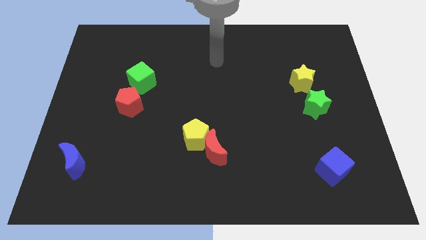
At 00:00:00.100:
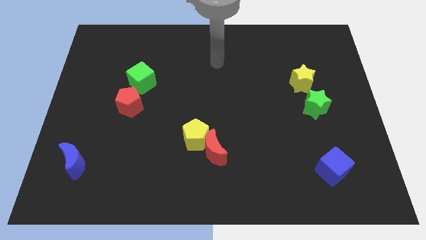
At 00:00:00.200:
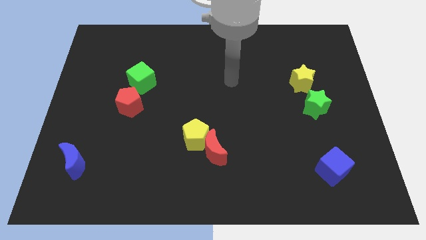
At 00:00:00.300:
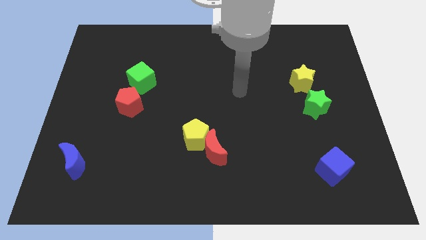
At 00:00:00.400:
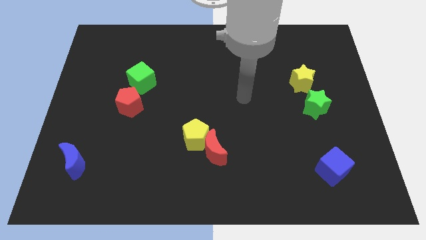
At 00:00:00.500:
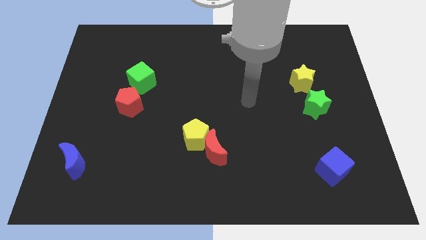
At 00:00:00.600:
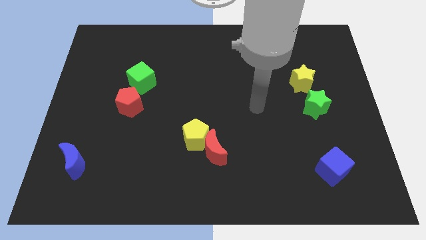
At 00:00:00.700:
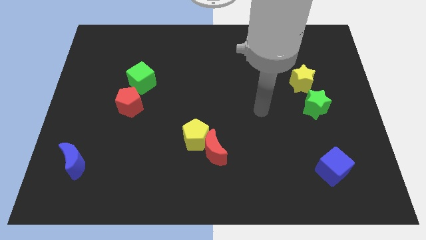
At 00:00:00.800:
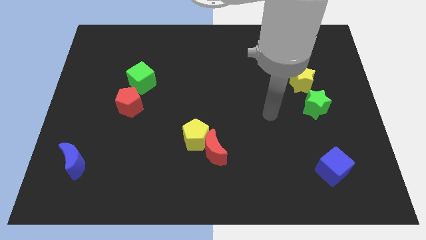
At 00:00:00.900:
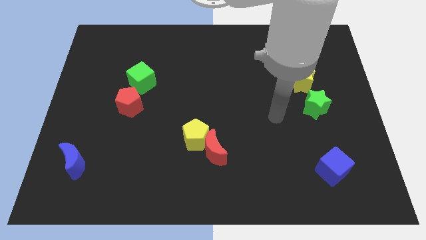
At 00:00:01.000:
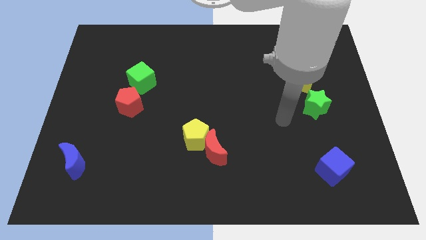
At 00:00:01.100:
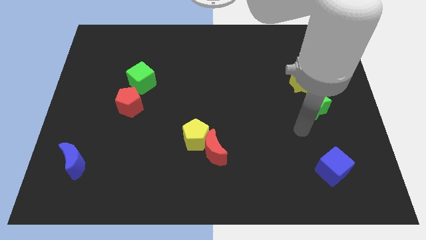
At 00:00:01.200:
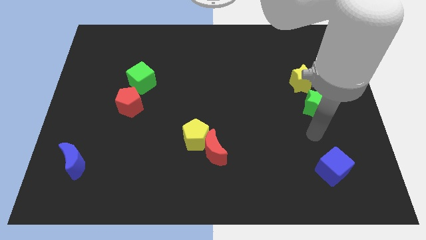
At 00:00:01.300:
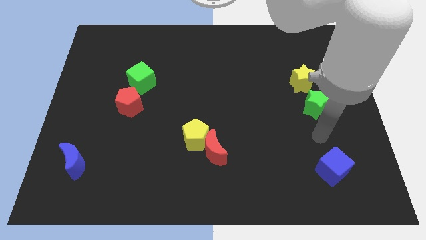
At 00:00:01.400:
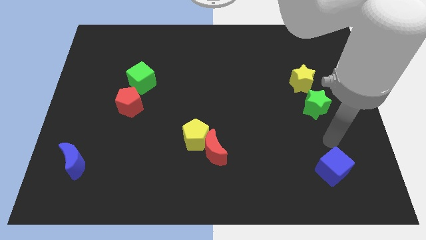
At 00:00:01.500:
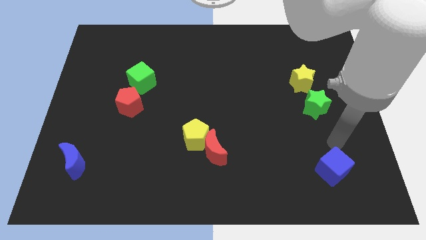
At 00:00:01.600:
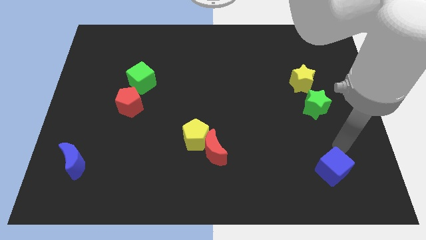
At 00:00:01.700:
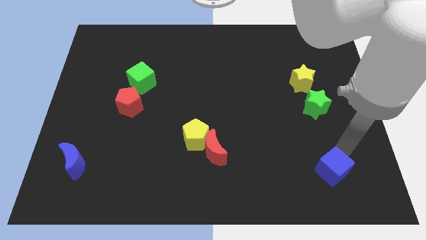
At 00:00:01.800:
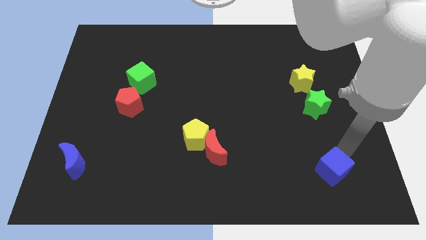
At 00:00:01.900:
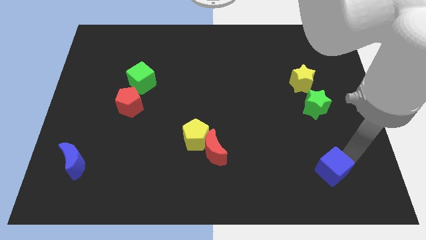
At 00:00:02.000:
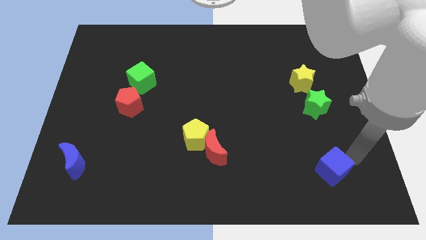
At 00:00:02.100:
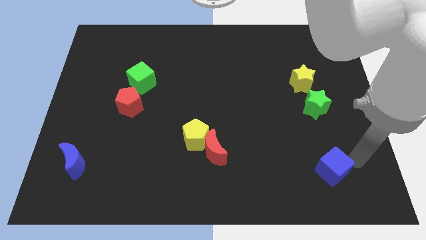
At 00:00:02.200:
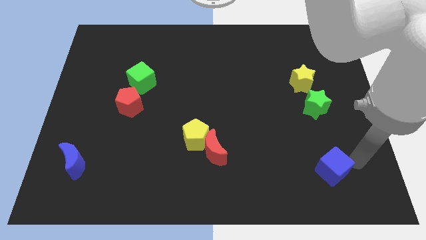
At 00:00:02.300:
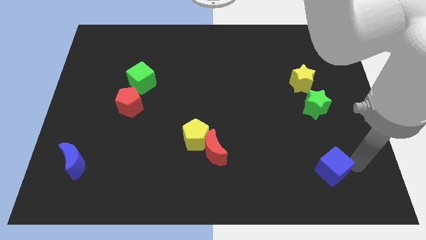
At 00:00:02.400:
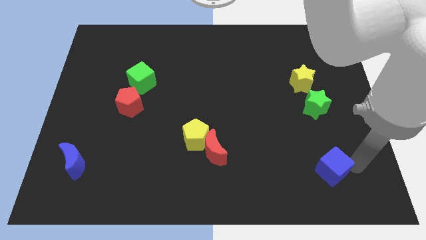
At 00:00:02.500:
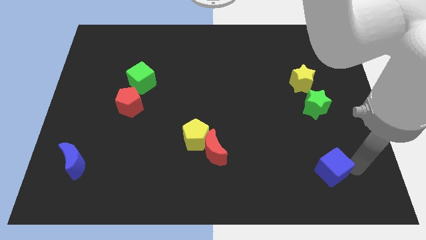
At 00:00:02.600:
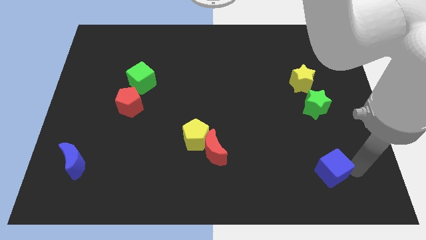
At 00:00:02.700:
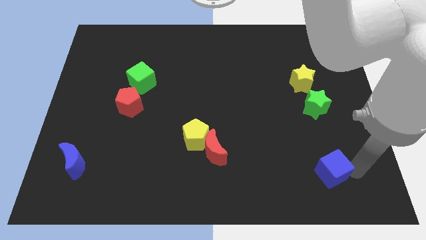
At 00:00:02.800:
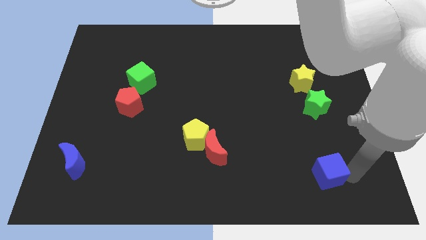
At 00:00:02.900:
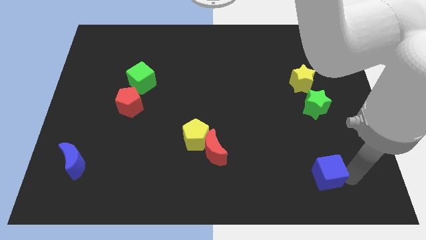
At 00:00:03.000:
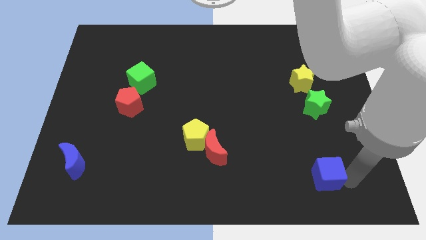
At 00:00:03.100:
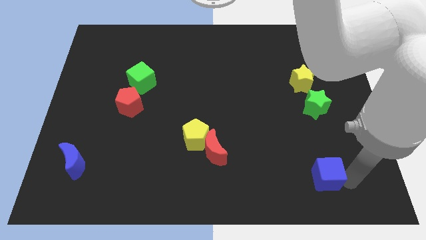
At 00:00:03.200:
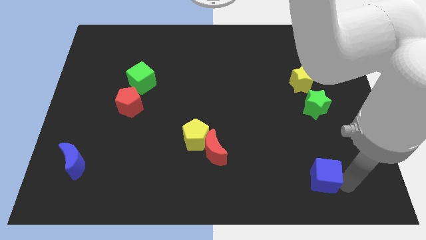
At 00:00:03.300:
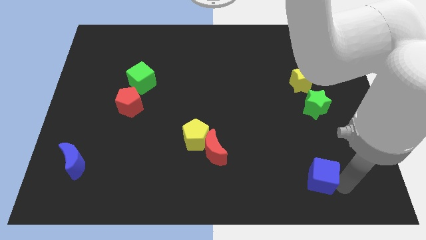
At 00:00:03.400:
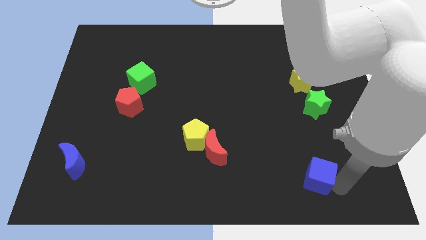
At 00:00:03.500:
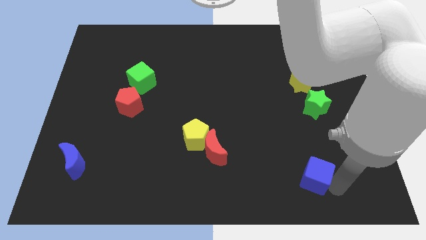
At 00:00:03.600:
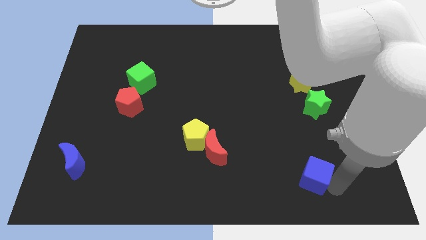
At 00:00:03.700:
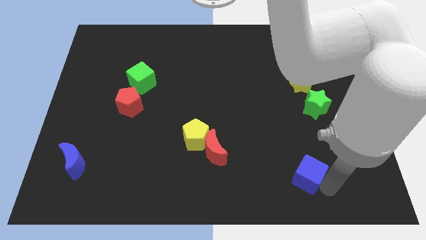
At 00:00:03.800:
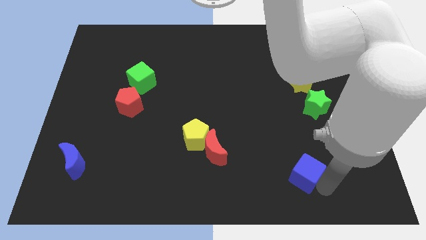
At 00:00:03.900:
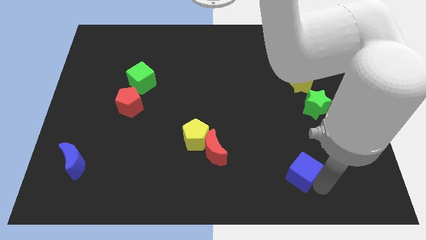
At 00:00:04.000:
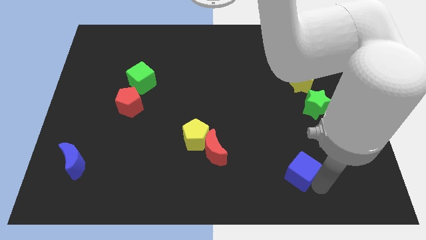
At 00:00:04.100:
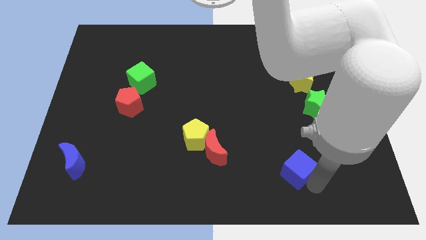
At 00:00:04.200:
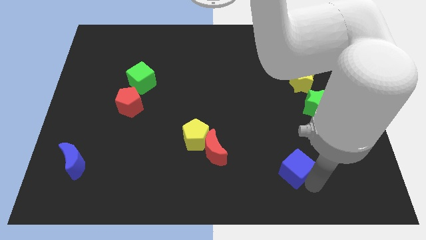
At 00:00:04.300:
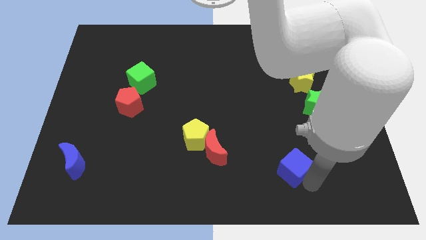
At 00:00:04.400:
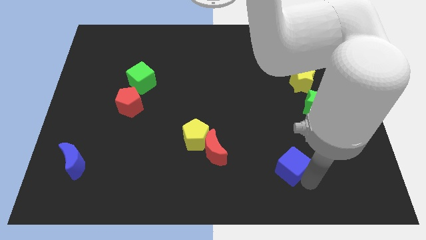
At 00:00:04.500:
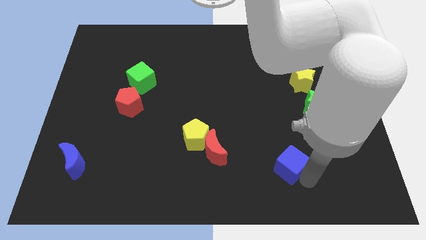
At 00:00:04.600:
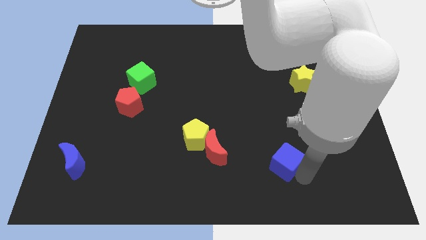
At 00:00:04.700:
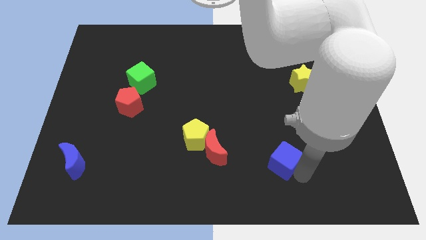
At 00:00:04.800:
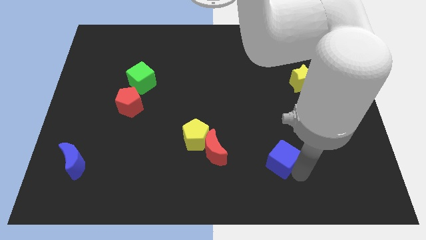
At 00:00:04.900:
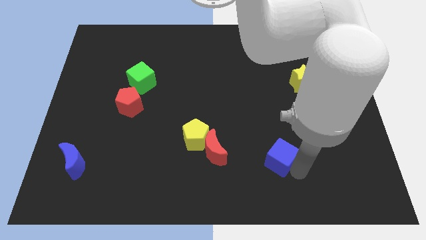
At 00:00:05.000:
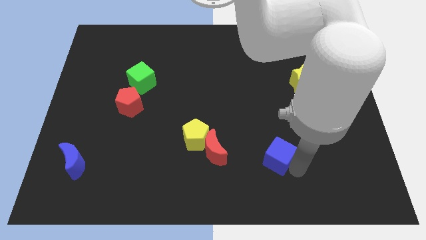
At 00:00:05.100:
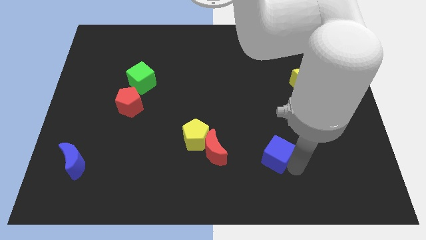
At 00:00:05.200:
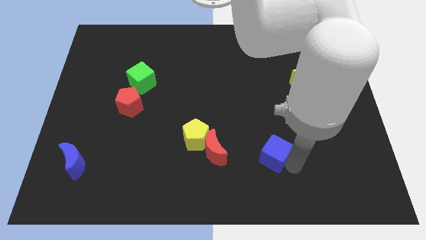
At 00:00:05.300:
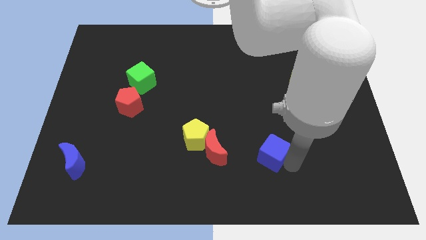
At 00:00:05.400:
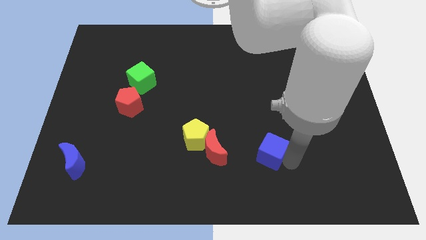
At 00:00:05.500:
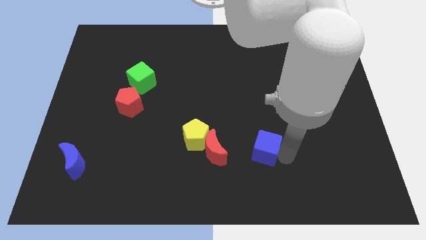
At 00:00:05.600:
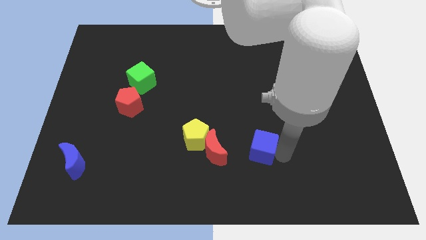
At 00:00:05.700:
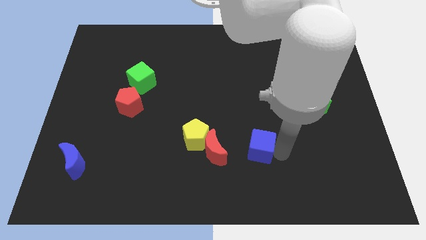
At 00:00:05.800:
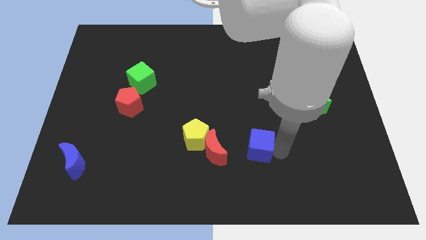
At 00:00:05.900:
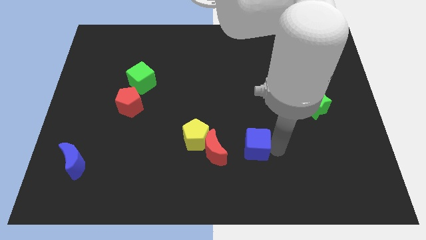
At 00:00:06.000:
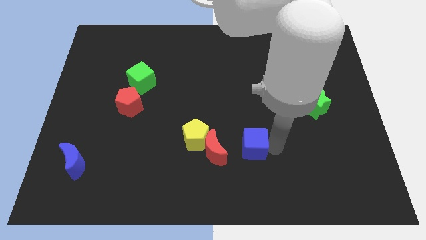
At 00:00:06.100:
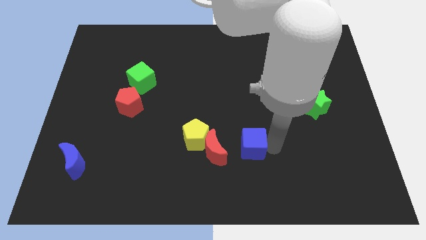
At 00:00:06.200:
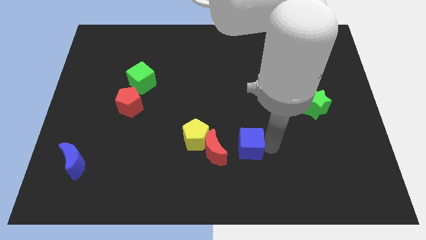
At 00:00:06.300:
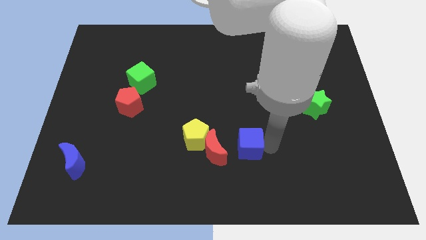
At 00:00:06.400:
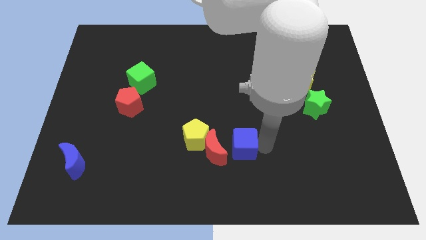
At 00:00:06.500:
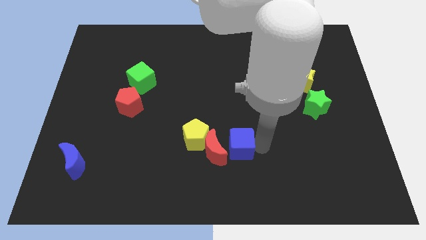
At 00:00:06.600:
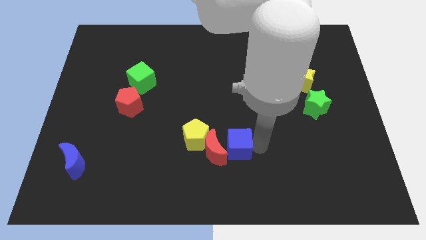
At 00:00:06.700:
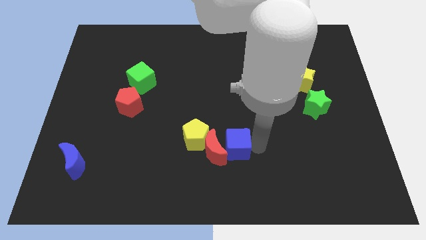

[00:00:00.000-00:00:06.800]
push the blue cube close to the red moon

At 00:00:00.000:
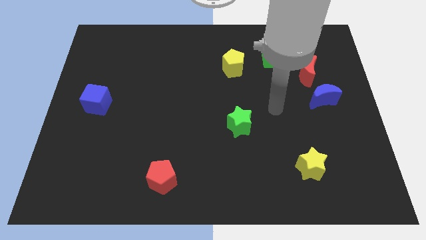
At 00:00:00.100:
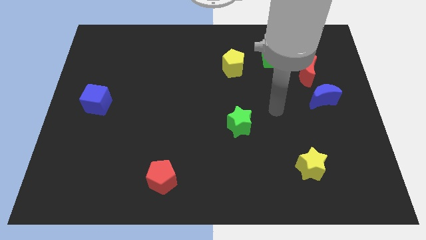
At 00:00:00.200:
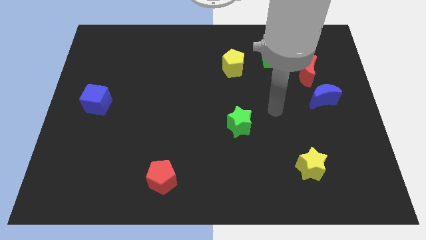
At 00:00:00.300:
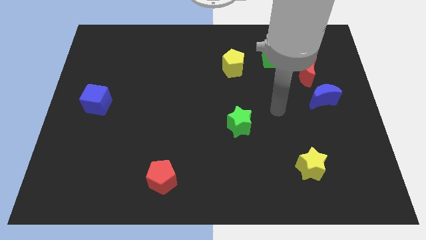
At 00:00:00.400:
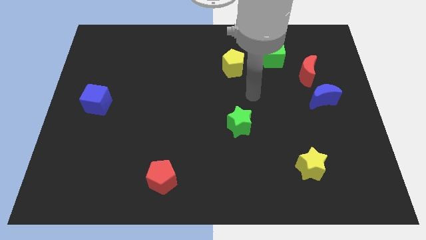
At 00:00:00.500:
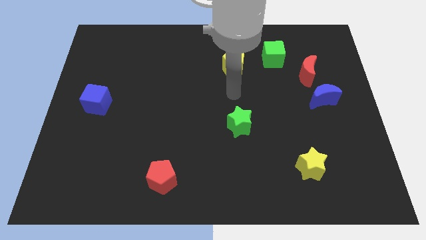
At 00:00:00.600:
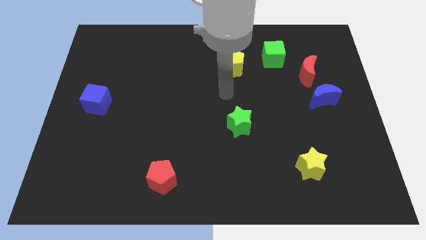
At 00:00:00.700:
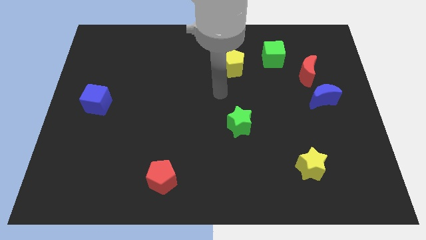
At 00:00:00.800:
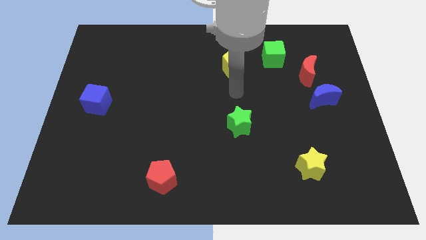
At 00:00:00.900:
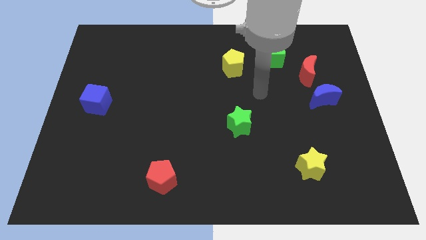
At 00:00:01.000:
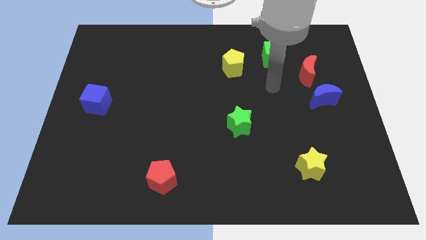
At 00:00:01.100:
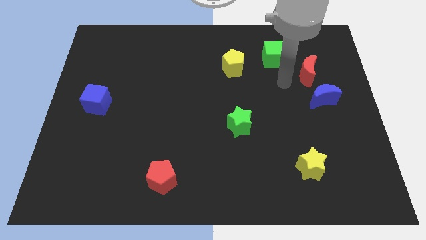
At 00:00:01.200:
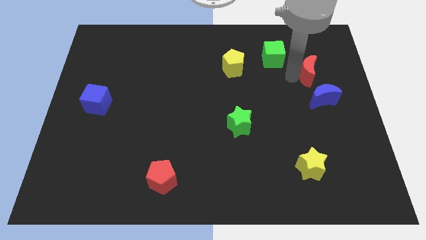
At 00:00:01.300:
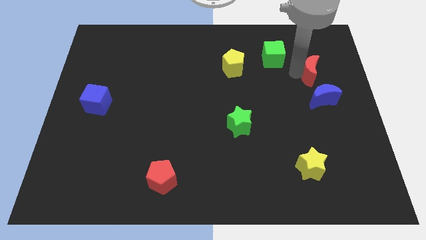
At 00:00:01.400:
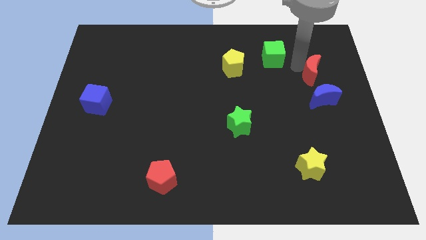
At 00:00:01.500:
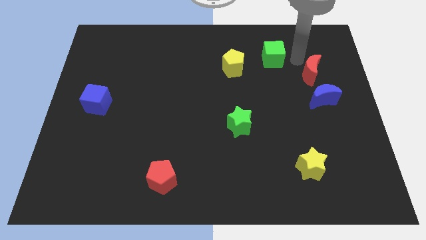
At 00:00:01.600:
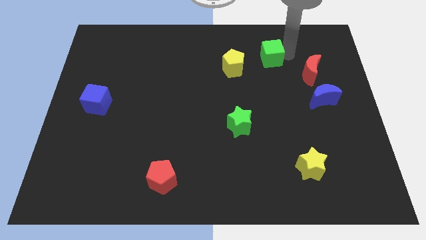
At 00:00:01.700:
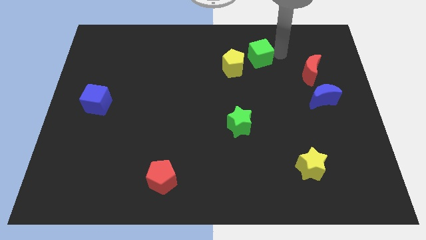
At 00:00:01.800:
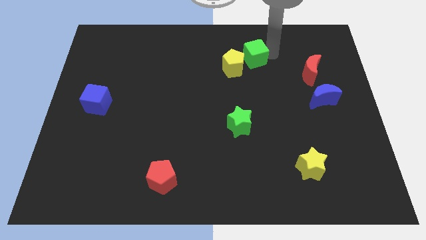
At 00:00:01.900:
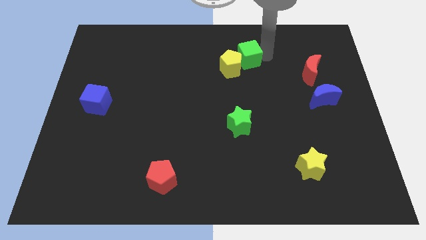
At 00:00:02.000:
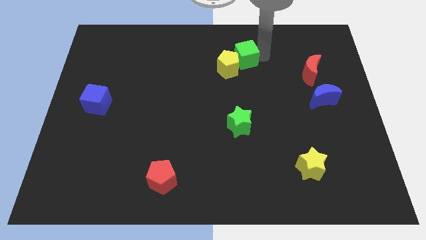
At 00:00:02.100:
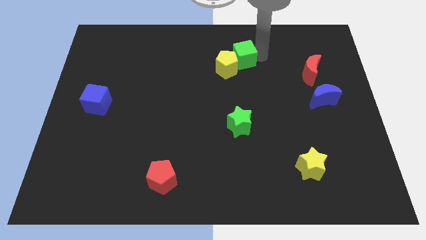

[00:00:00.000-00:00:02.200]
push the green cube towards the yellow pentagon
